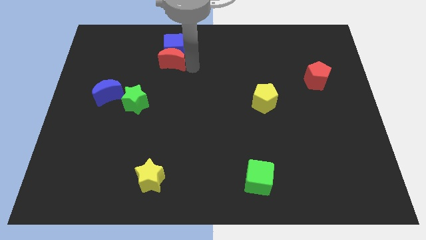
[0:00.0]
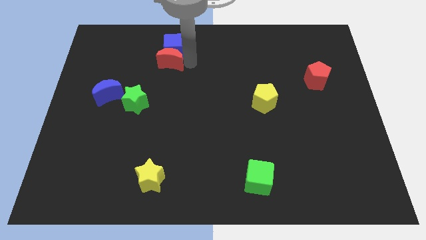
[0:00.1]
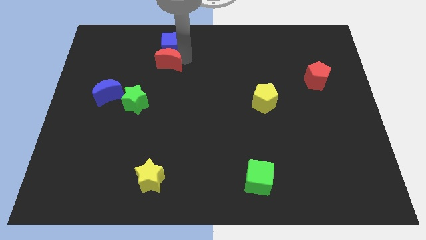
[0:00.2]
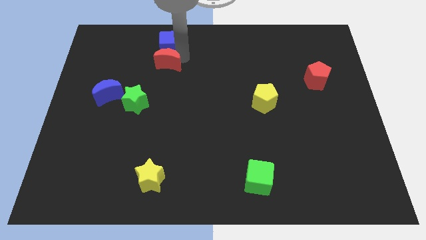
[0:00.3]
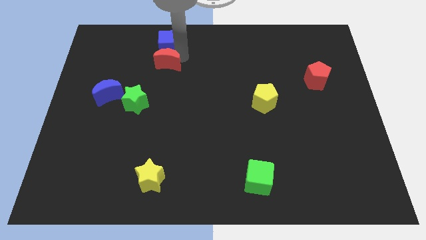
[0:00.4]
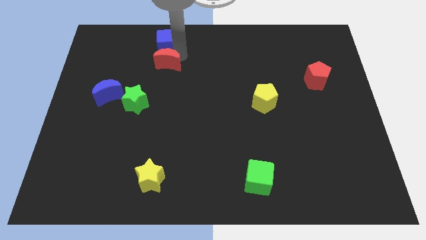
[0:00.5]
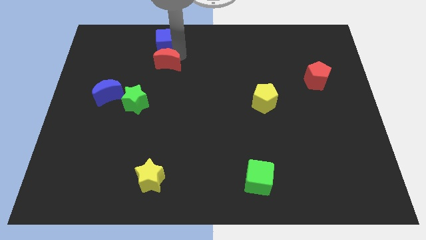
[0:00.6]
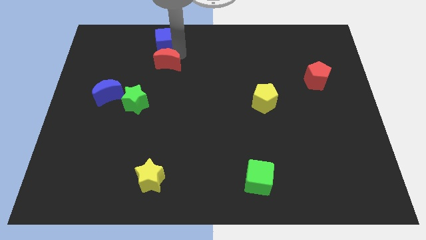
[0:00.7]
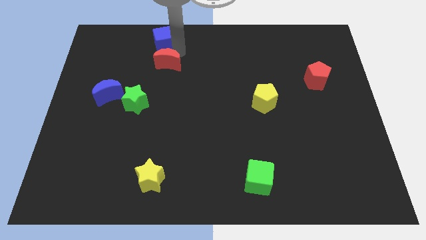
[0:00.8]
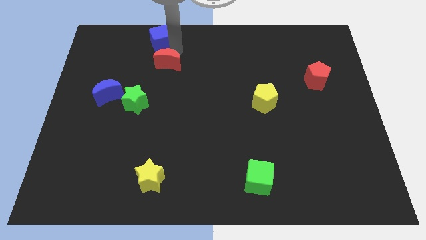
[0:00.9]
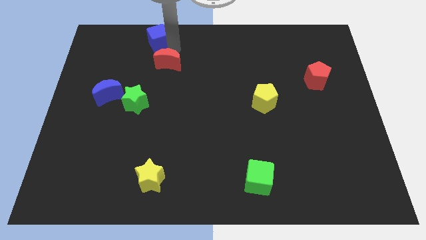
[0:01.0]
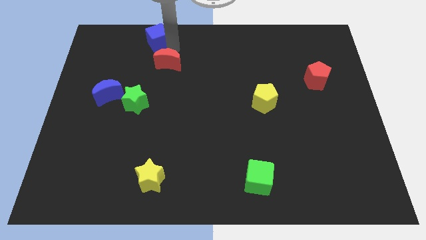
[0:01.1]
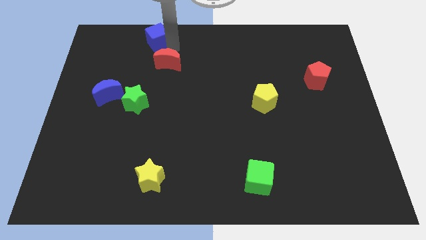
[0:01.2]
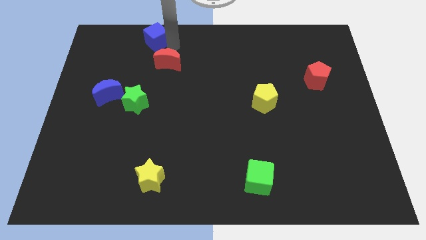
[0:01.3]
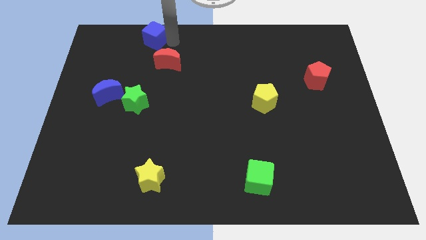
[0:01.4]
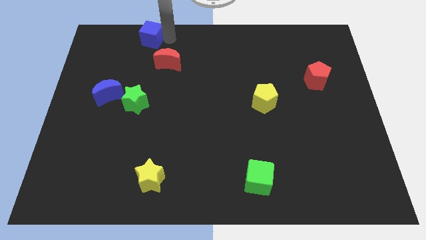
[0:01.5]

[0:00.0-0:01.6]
move the blue cube slightly towards the right top of the board

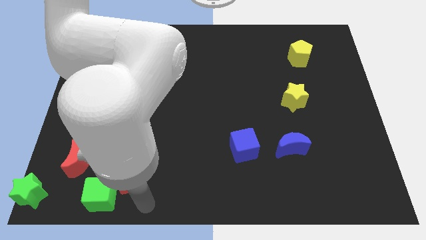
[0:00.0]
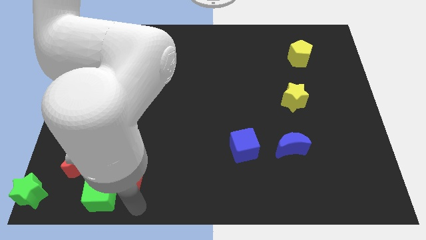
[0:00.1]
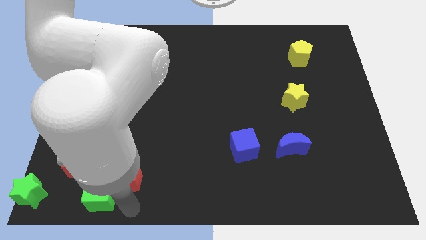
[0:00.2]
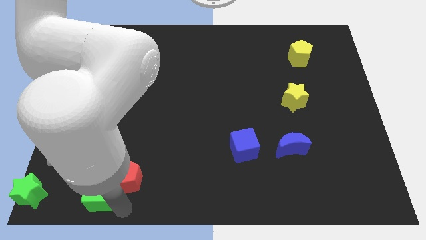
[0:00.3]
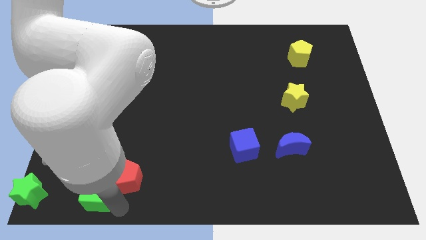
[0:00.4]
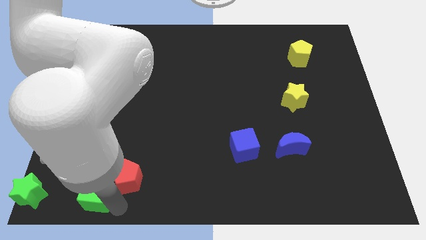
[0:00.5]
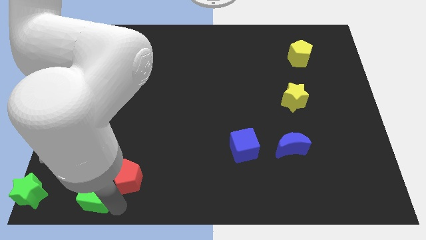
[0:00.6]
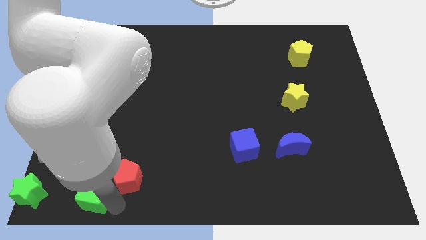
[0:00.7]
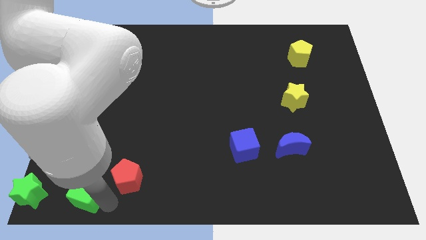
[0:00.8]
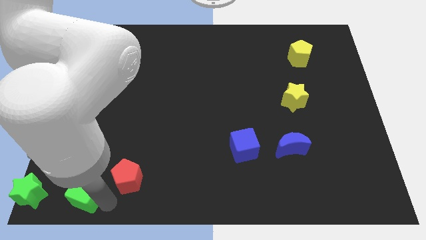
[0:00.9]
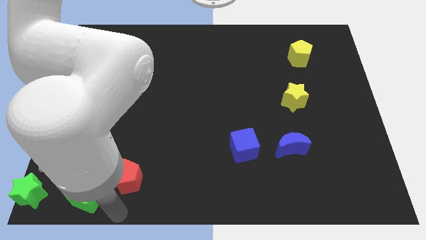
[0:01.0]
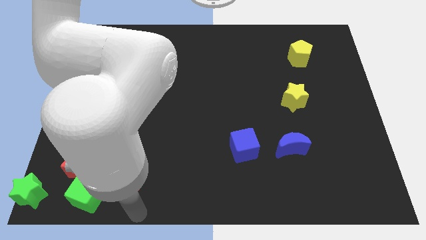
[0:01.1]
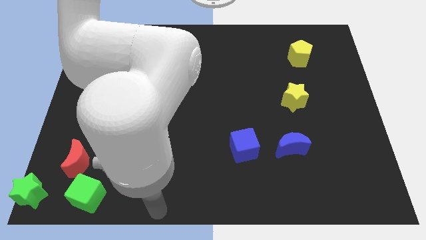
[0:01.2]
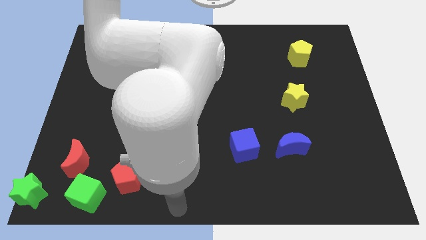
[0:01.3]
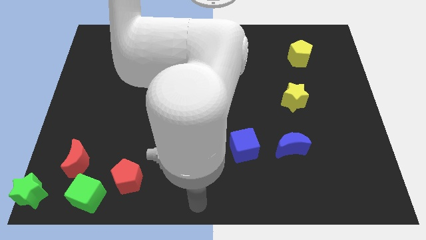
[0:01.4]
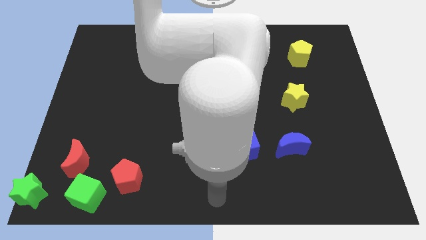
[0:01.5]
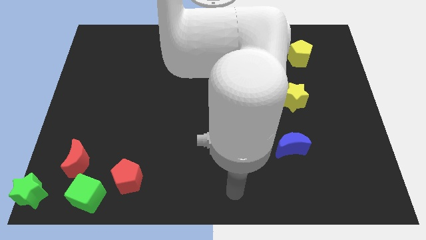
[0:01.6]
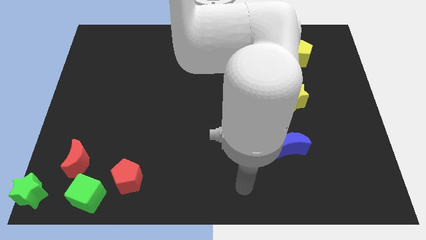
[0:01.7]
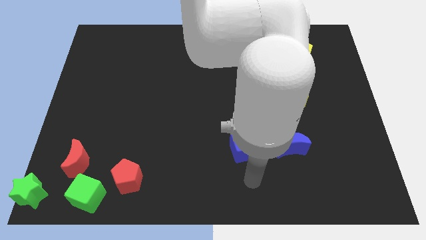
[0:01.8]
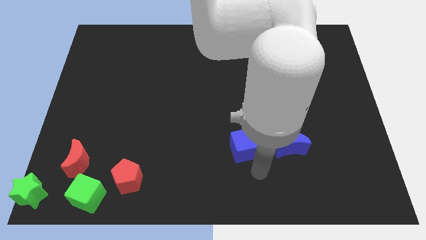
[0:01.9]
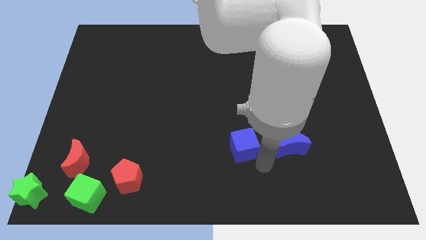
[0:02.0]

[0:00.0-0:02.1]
place your arm in between the blue cube and blue moon

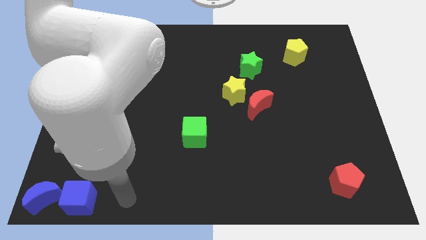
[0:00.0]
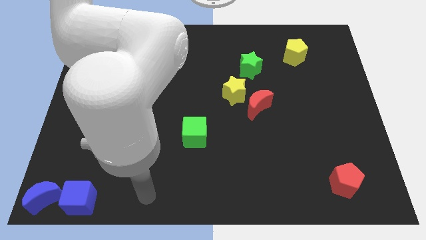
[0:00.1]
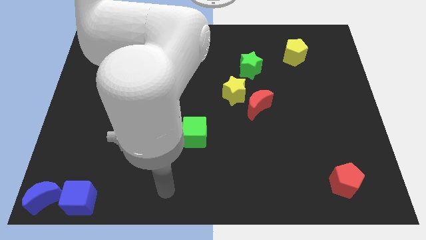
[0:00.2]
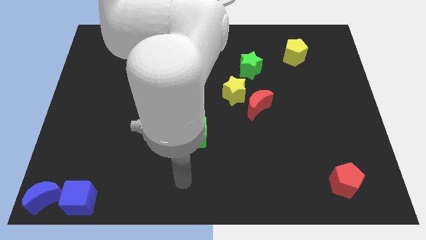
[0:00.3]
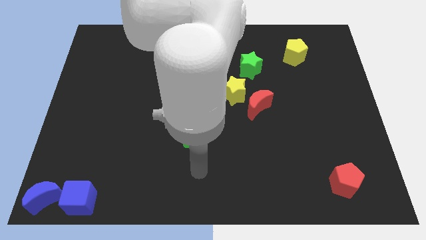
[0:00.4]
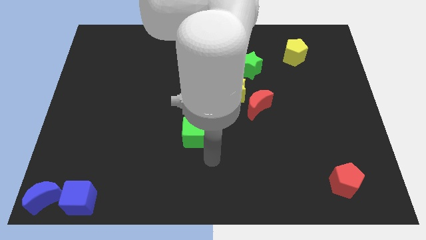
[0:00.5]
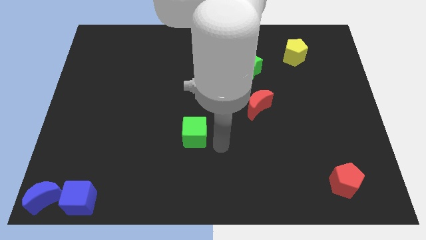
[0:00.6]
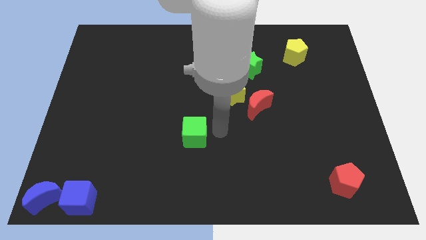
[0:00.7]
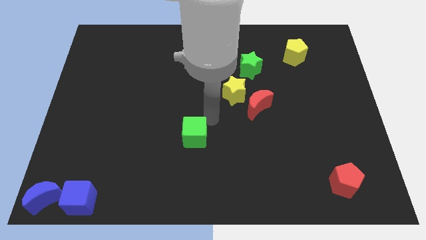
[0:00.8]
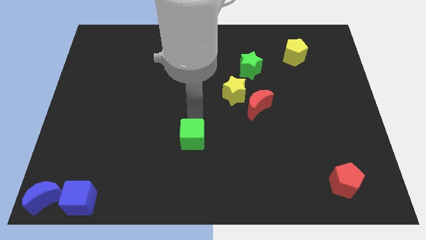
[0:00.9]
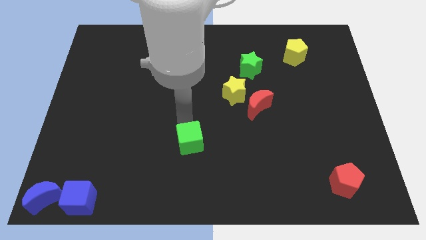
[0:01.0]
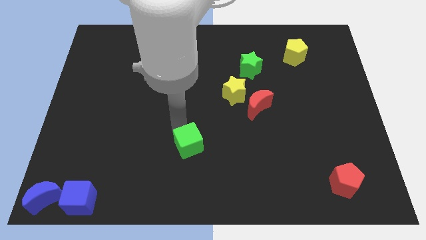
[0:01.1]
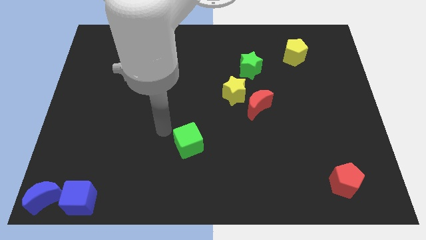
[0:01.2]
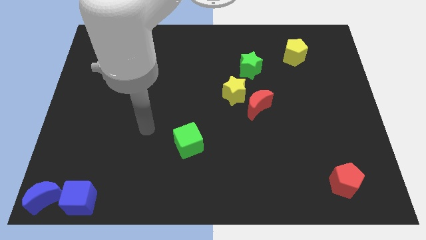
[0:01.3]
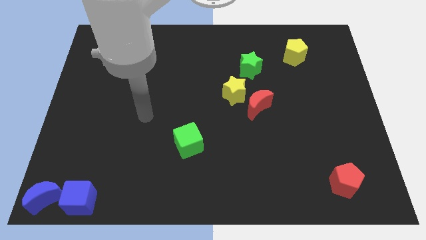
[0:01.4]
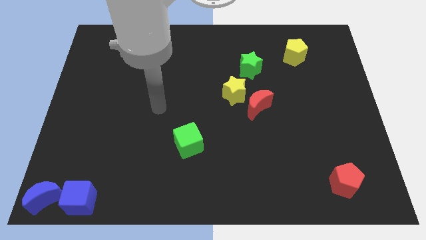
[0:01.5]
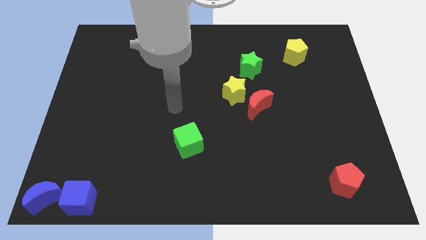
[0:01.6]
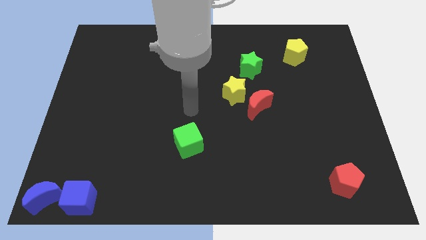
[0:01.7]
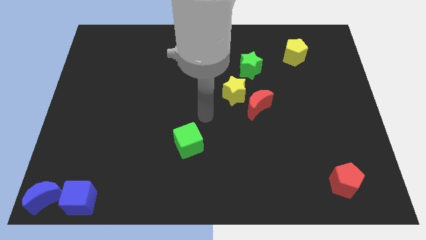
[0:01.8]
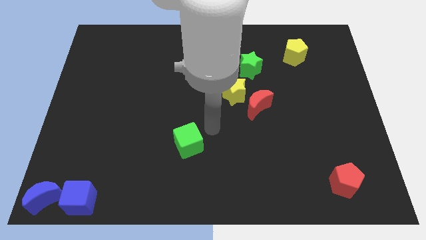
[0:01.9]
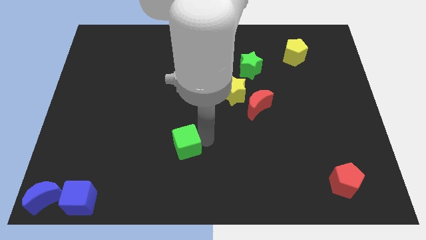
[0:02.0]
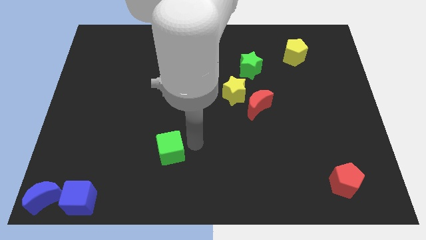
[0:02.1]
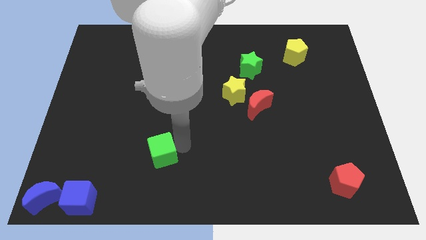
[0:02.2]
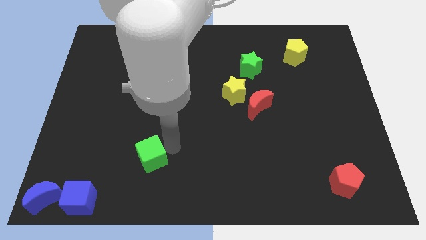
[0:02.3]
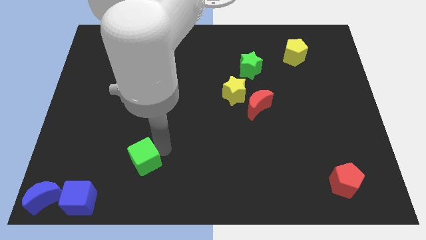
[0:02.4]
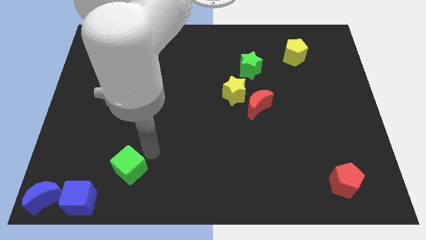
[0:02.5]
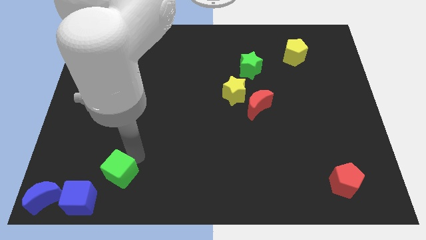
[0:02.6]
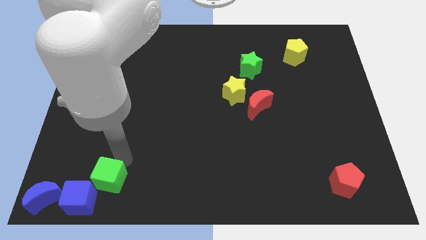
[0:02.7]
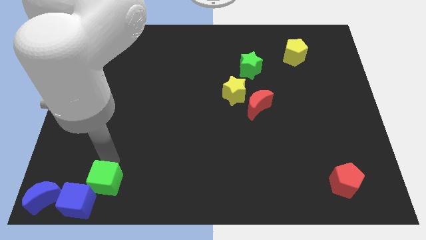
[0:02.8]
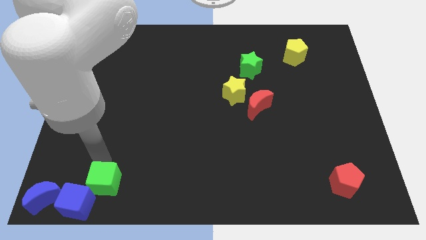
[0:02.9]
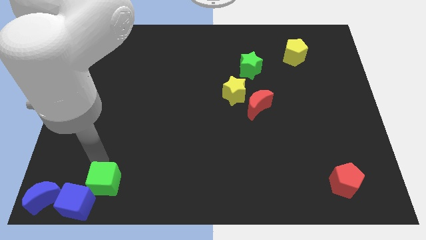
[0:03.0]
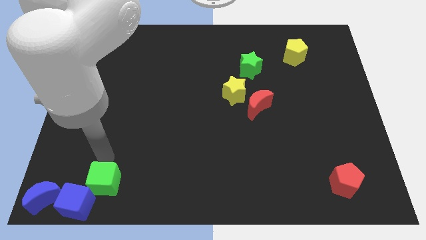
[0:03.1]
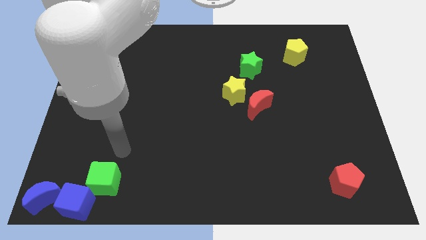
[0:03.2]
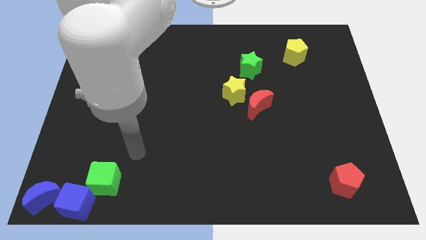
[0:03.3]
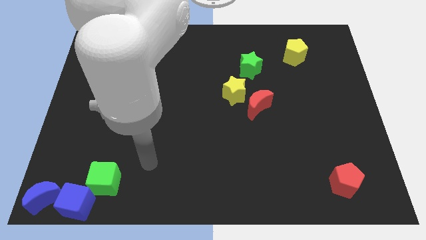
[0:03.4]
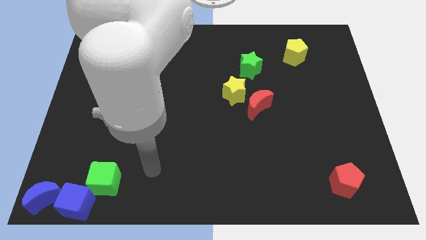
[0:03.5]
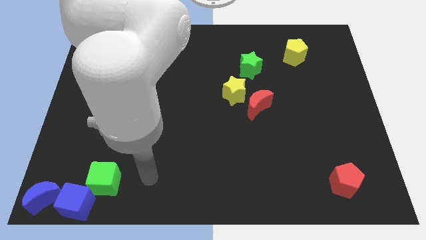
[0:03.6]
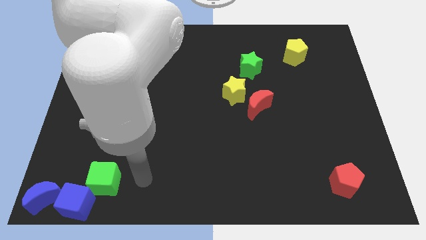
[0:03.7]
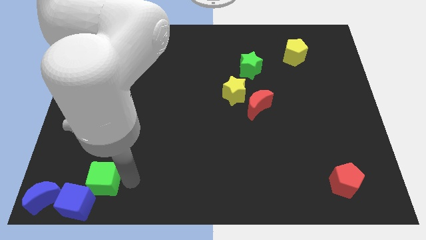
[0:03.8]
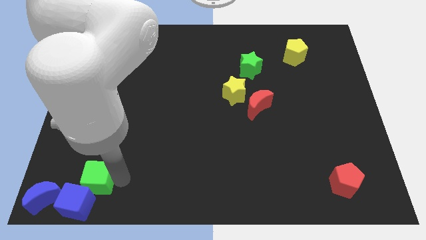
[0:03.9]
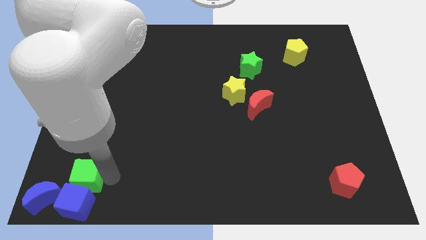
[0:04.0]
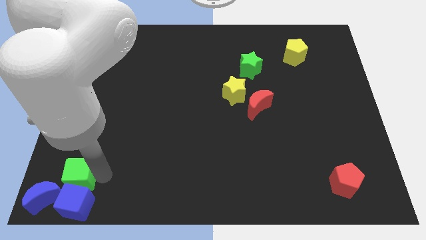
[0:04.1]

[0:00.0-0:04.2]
push the green cube into the blue cube

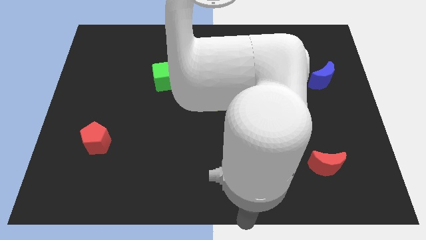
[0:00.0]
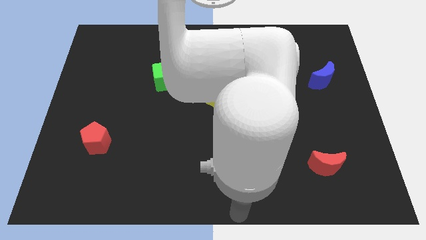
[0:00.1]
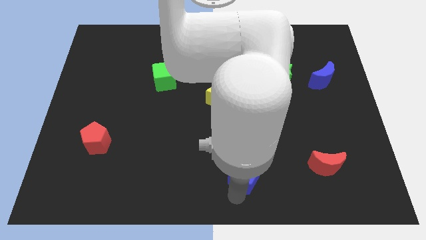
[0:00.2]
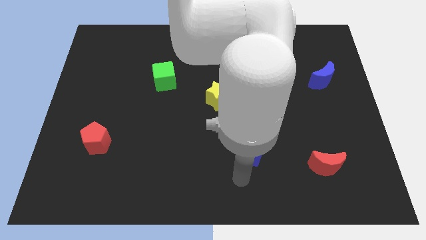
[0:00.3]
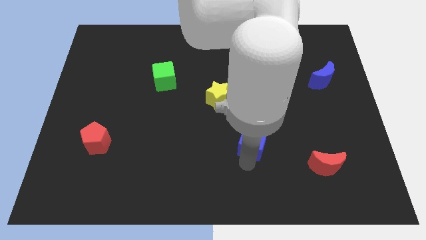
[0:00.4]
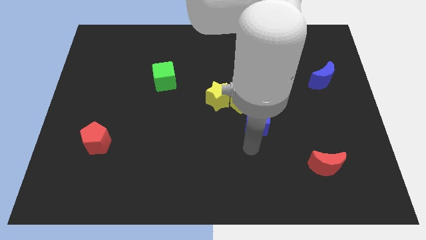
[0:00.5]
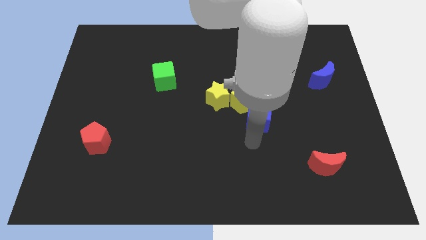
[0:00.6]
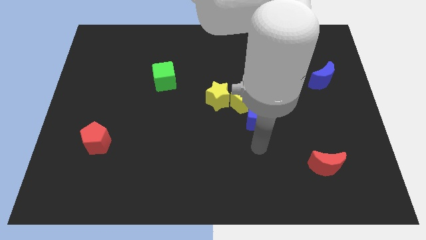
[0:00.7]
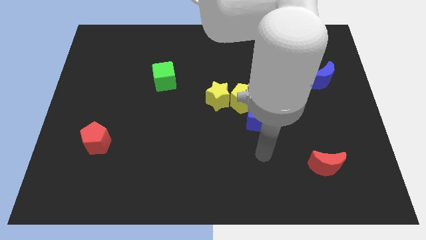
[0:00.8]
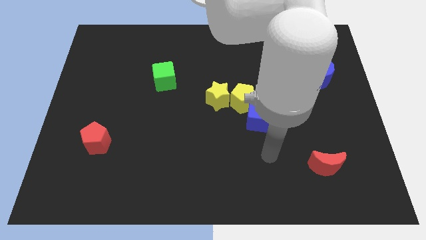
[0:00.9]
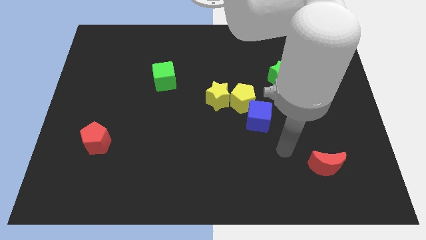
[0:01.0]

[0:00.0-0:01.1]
place the blue cube to the bottom right of the yellow pentagon

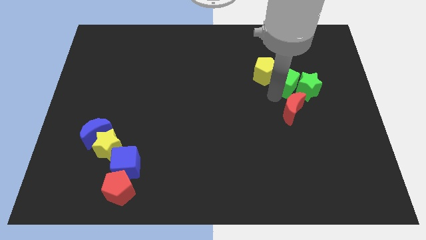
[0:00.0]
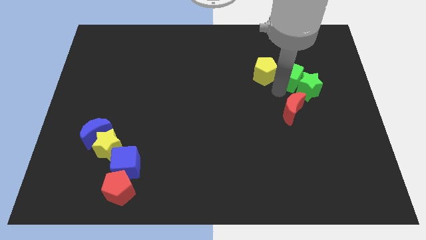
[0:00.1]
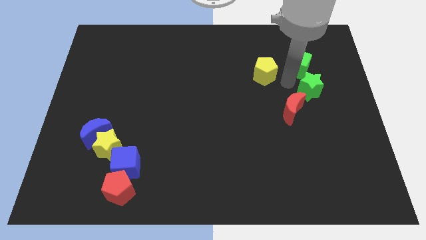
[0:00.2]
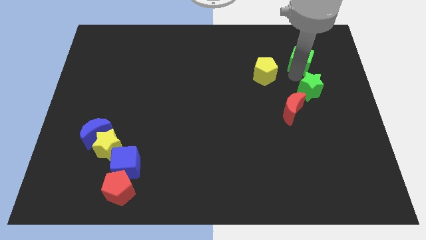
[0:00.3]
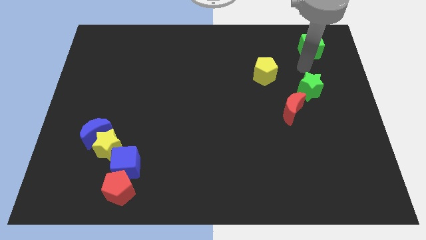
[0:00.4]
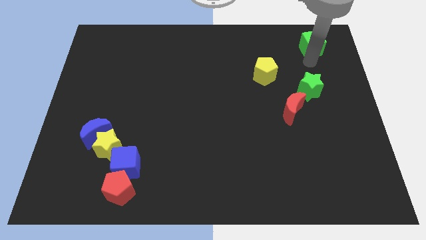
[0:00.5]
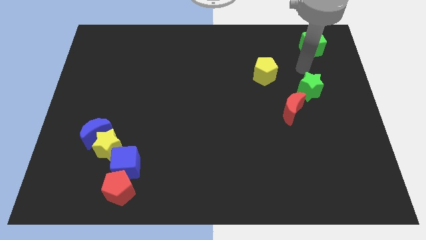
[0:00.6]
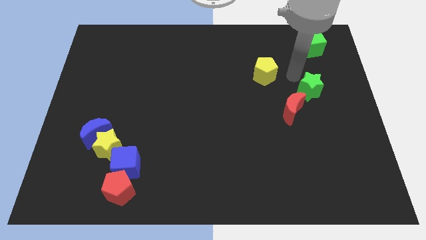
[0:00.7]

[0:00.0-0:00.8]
move the green cube to the top of the green star
